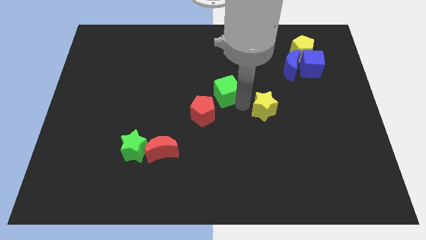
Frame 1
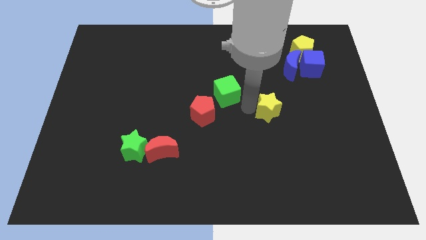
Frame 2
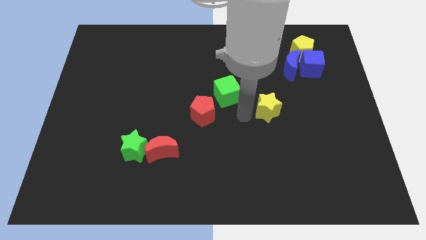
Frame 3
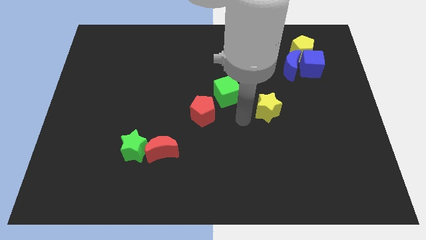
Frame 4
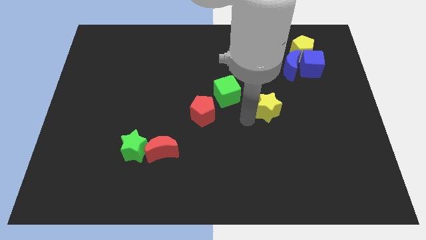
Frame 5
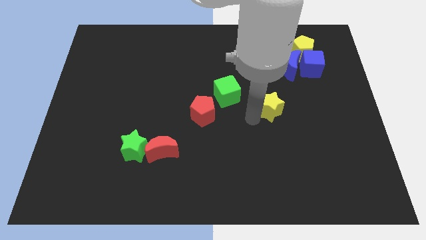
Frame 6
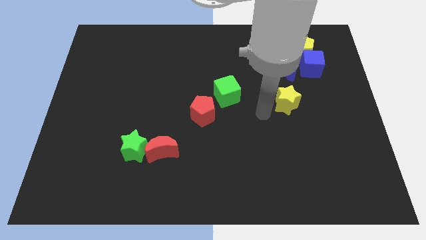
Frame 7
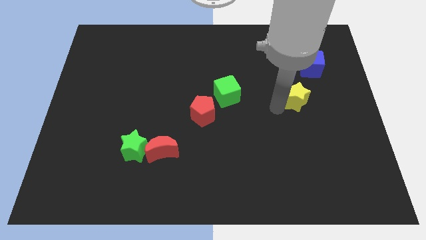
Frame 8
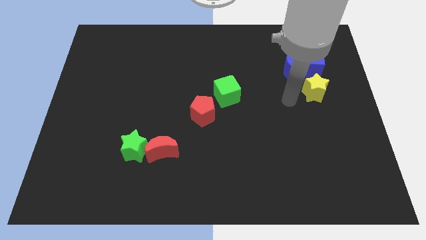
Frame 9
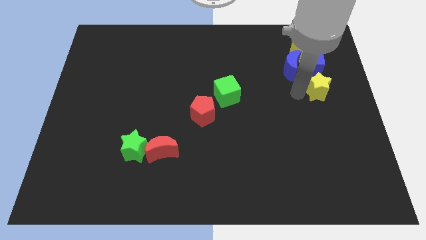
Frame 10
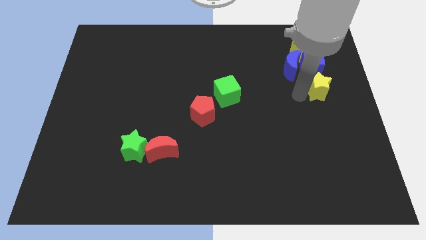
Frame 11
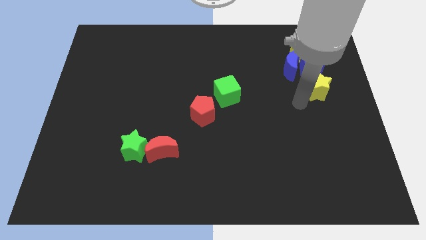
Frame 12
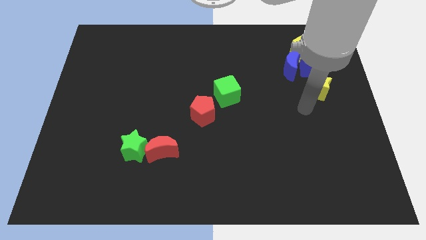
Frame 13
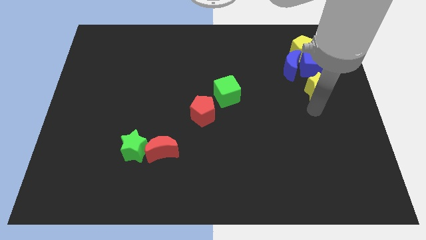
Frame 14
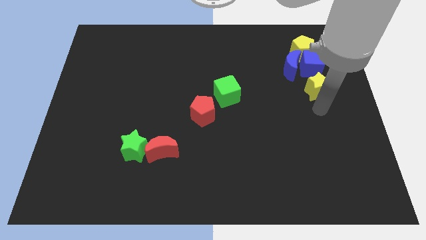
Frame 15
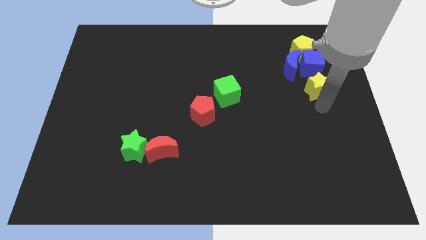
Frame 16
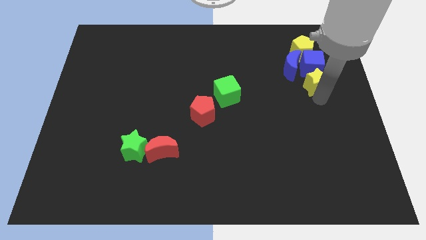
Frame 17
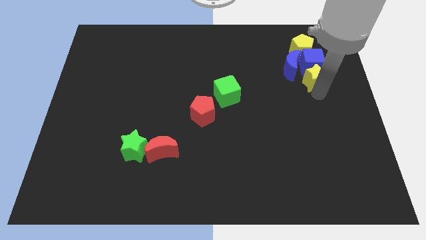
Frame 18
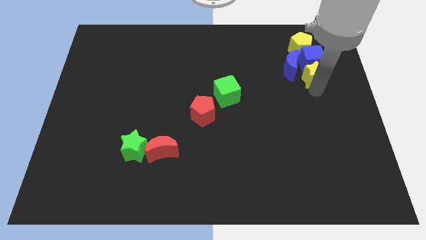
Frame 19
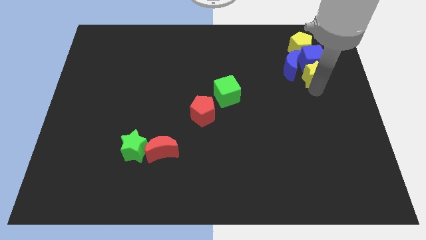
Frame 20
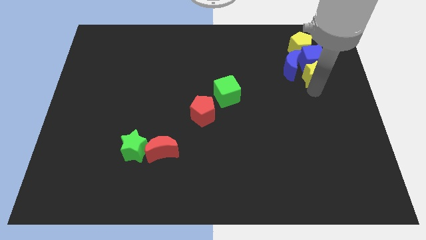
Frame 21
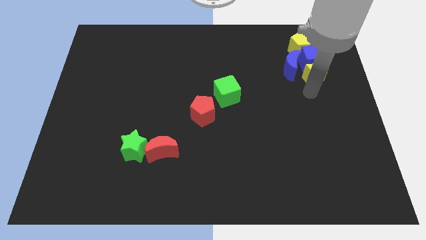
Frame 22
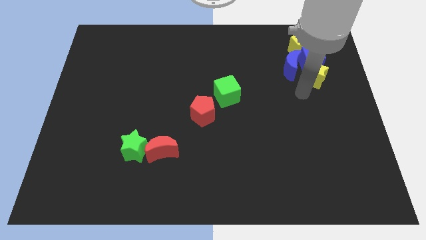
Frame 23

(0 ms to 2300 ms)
move the yellow star into the bottom of the blue cube

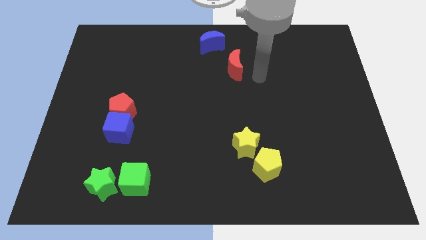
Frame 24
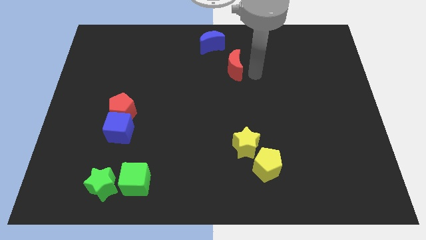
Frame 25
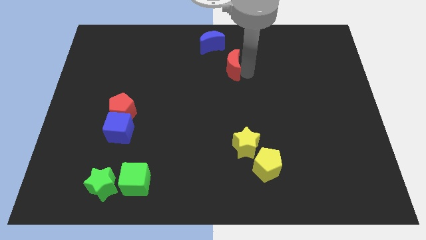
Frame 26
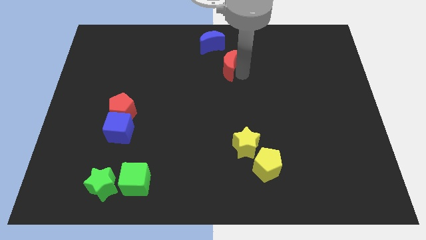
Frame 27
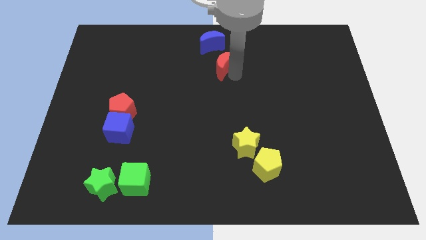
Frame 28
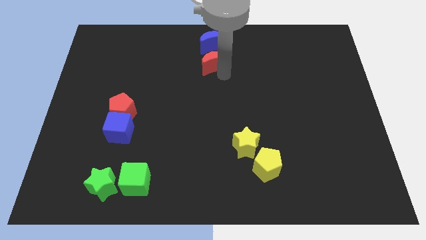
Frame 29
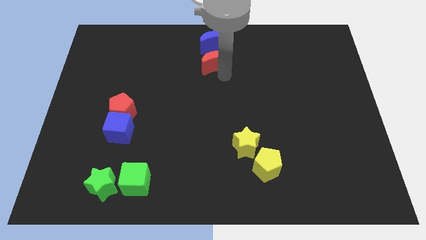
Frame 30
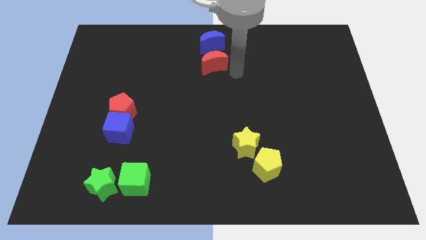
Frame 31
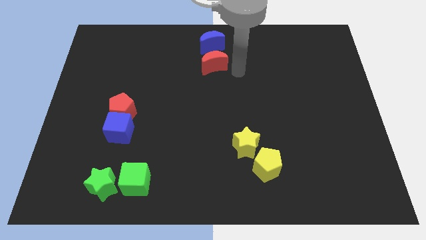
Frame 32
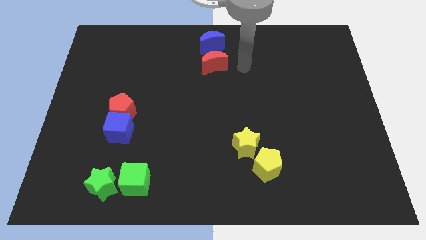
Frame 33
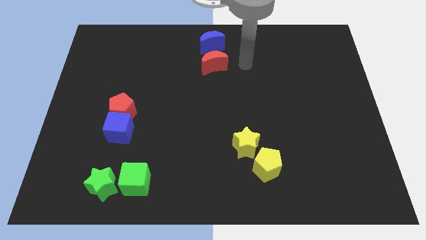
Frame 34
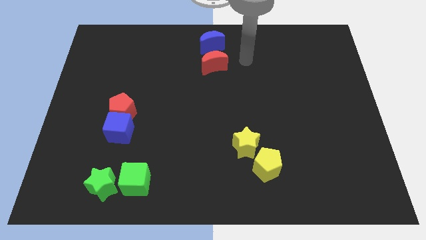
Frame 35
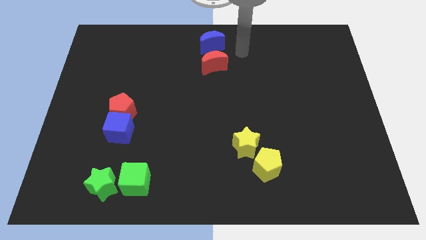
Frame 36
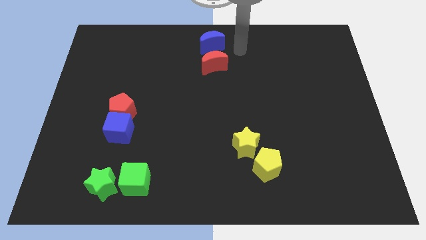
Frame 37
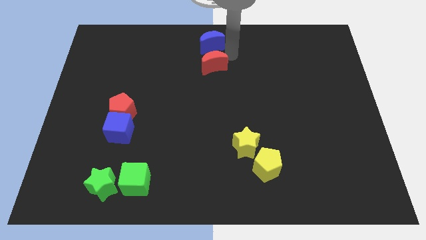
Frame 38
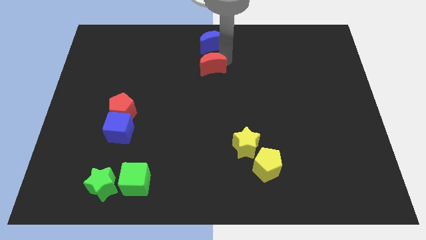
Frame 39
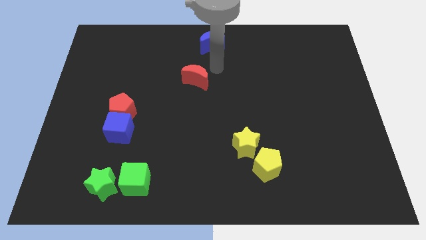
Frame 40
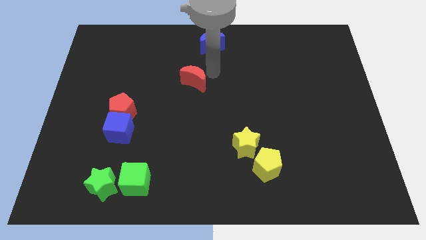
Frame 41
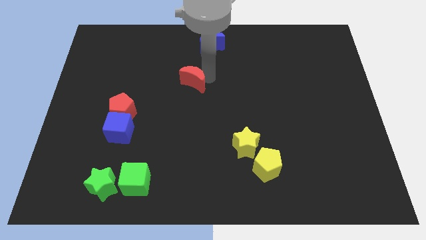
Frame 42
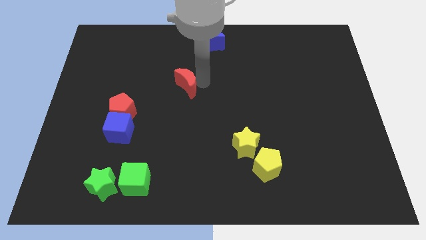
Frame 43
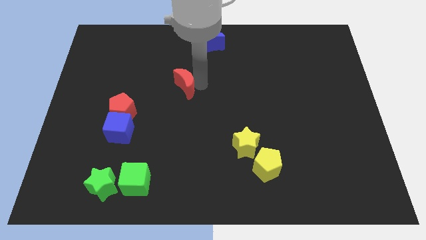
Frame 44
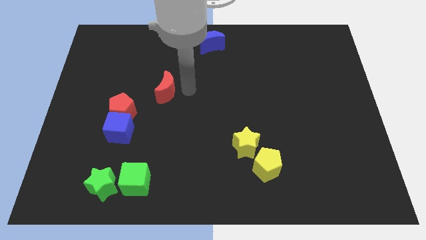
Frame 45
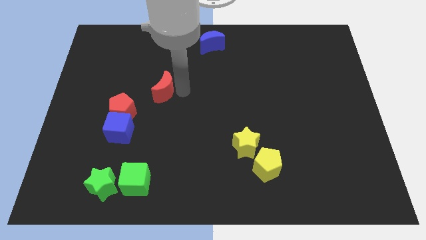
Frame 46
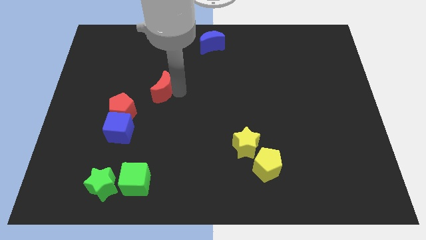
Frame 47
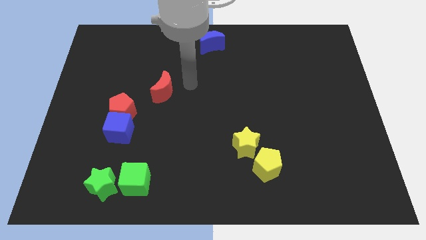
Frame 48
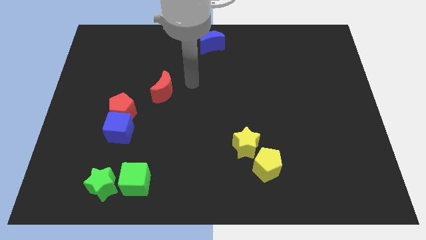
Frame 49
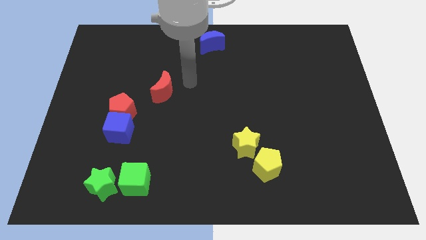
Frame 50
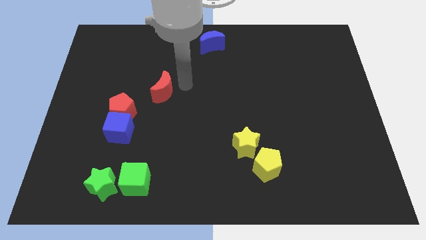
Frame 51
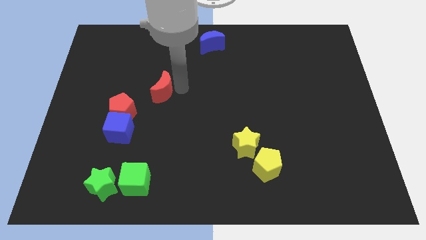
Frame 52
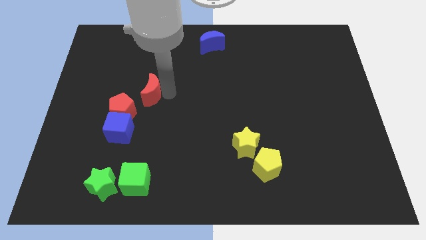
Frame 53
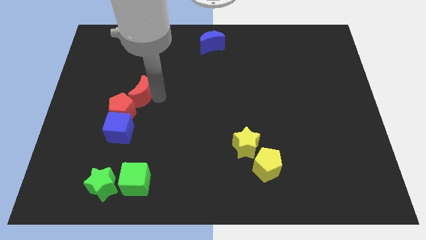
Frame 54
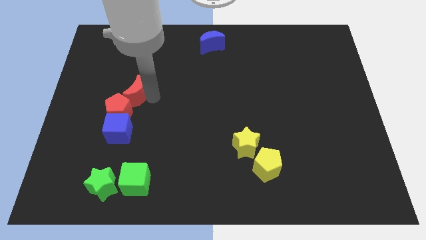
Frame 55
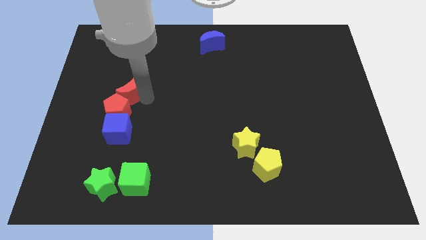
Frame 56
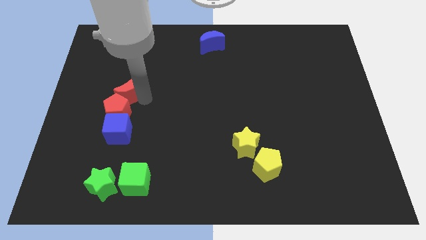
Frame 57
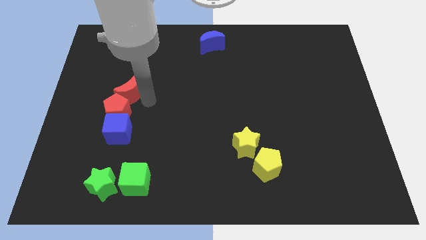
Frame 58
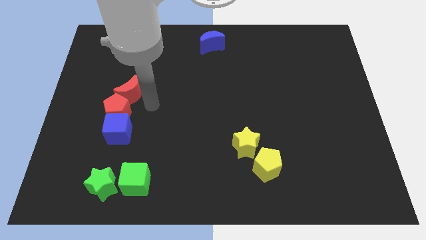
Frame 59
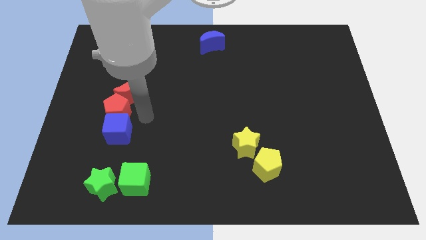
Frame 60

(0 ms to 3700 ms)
place red moon on top of the red pentagon

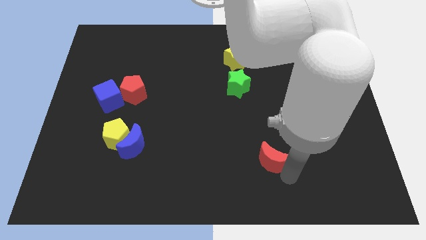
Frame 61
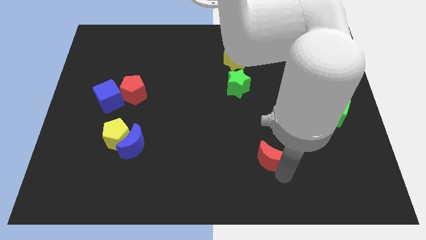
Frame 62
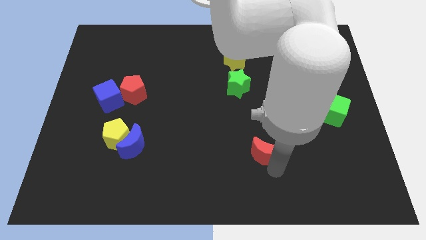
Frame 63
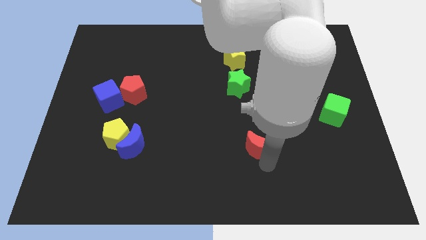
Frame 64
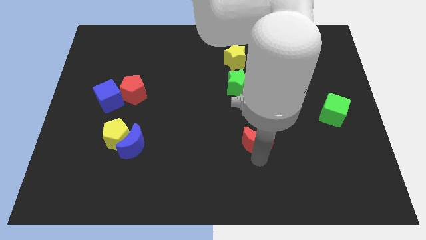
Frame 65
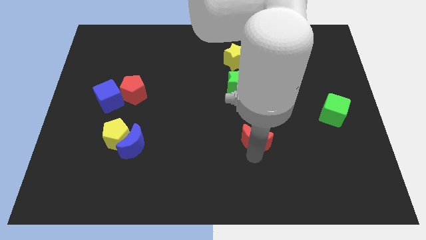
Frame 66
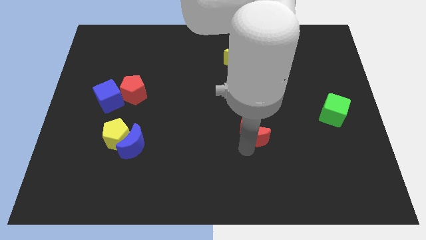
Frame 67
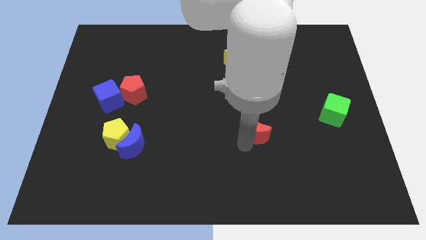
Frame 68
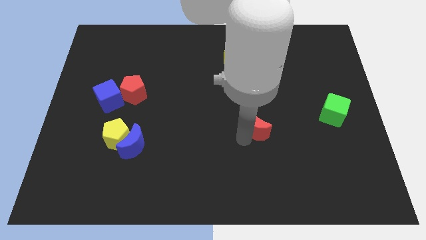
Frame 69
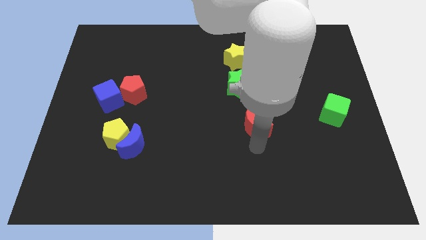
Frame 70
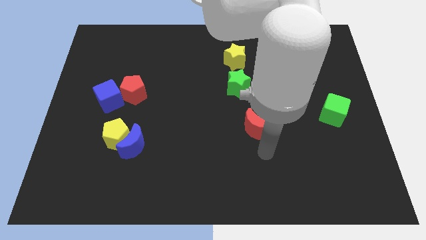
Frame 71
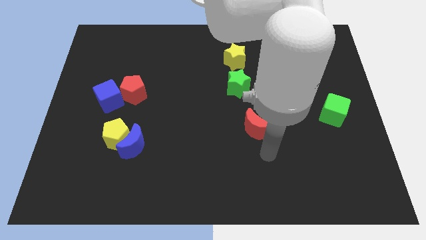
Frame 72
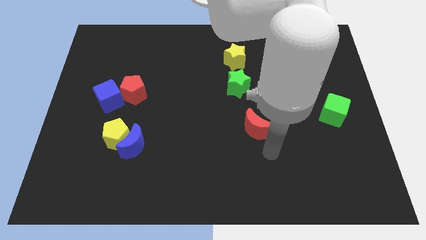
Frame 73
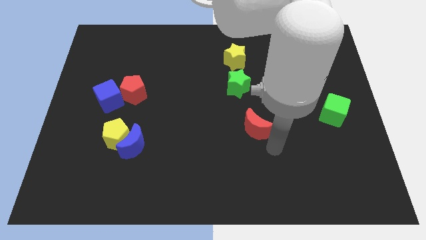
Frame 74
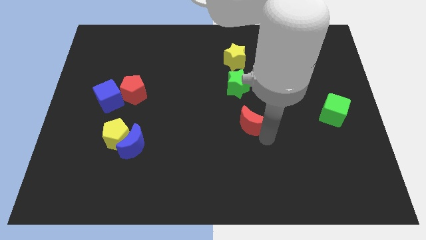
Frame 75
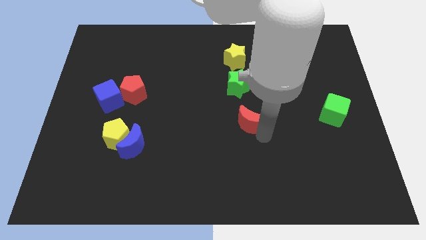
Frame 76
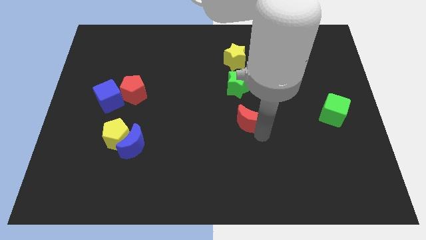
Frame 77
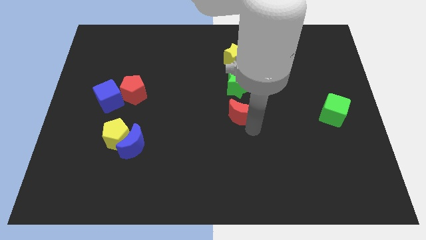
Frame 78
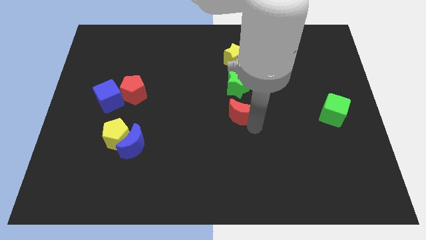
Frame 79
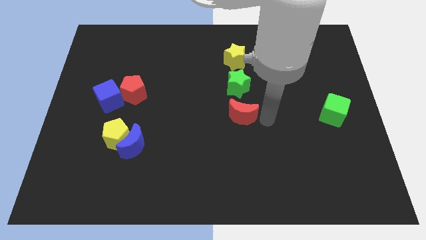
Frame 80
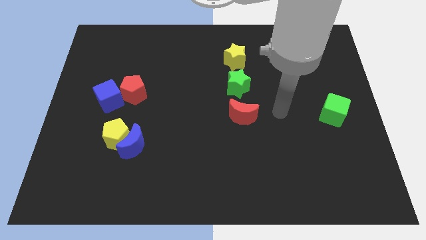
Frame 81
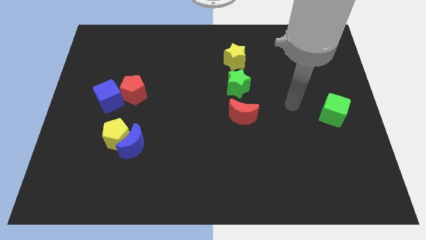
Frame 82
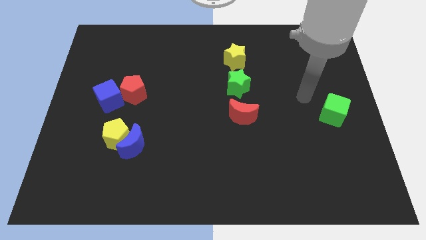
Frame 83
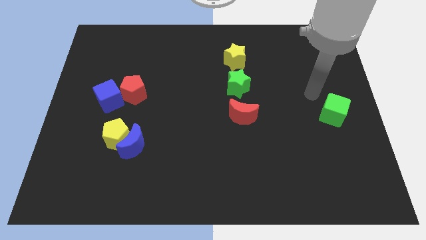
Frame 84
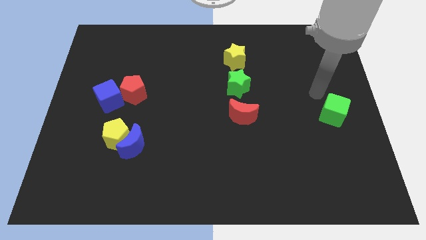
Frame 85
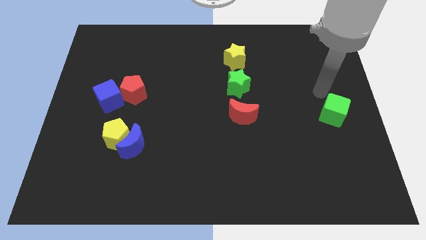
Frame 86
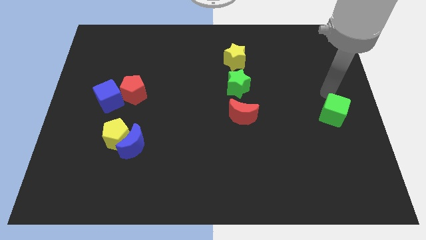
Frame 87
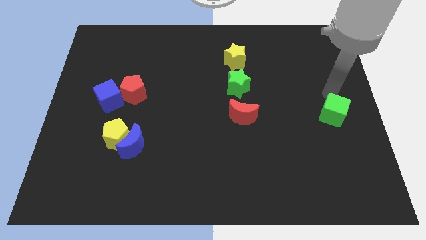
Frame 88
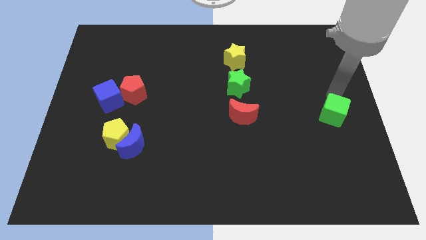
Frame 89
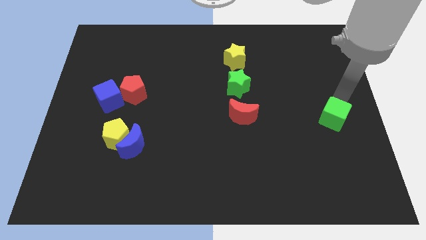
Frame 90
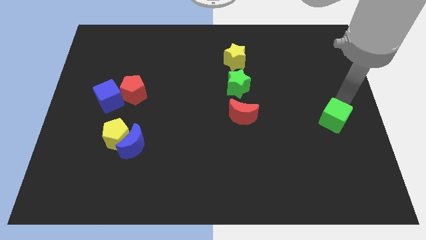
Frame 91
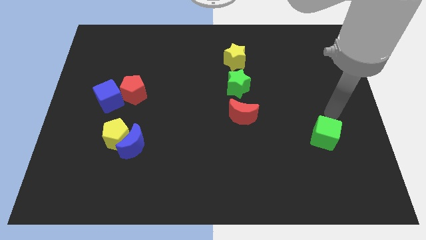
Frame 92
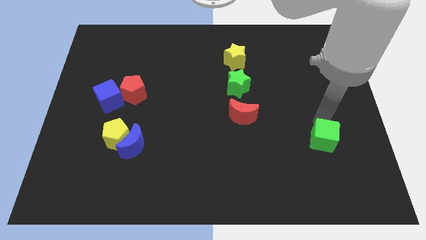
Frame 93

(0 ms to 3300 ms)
drag the red moon and place it below the green star
